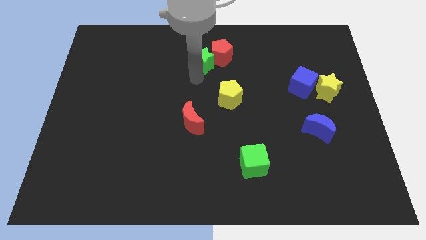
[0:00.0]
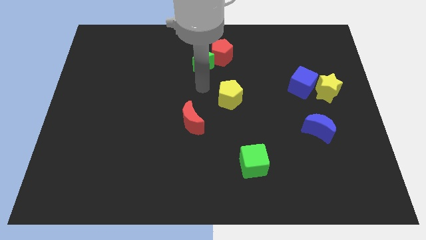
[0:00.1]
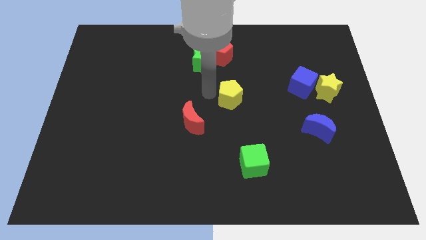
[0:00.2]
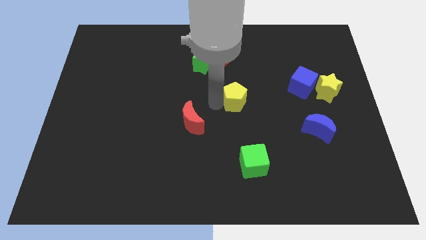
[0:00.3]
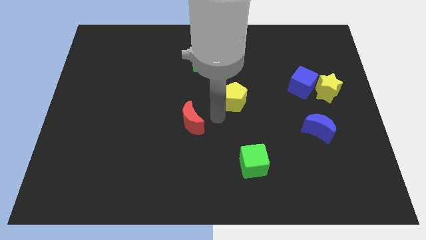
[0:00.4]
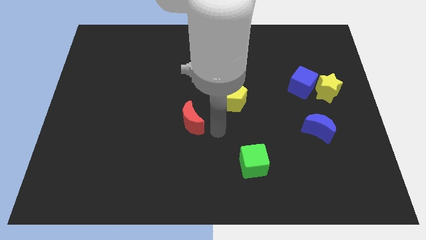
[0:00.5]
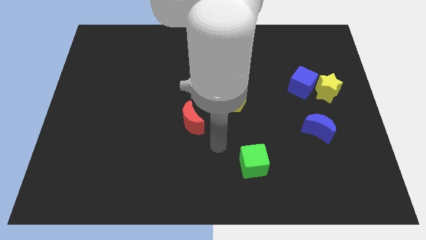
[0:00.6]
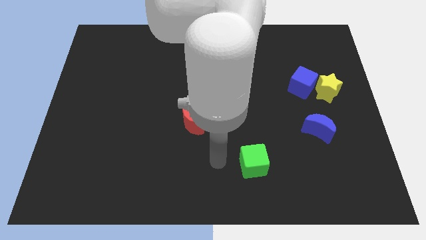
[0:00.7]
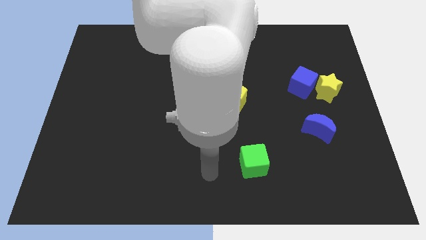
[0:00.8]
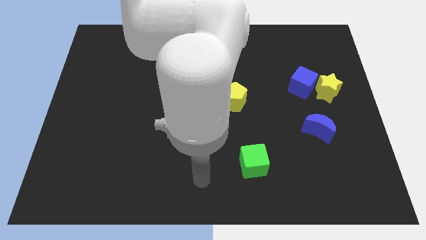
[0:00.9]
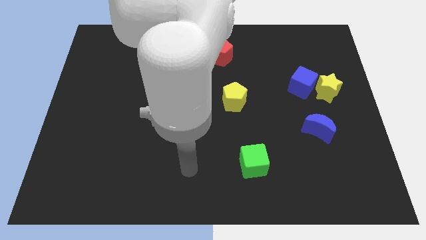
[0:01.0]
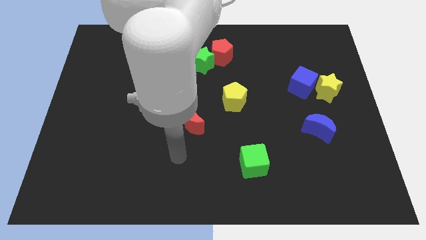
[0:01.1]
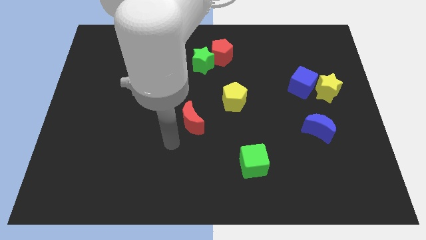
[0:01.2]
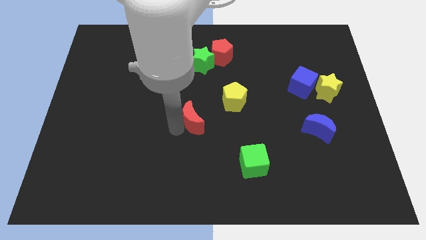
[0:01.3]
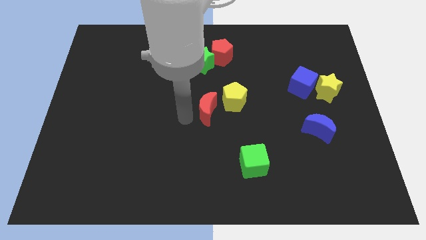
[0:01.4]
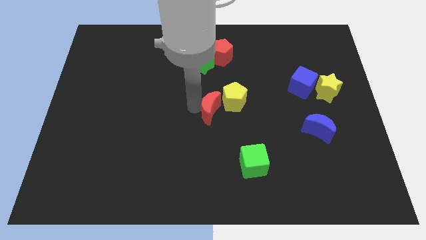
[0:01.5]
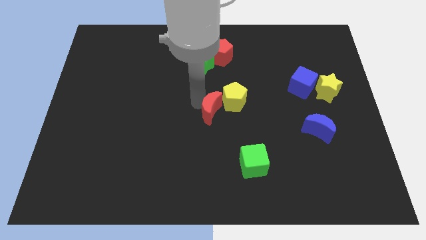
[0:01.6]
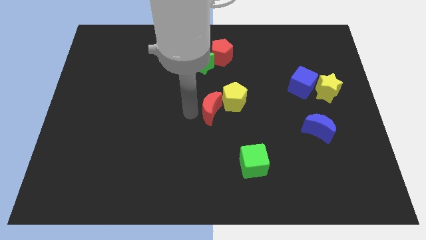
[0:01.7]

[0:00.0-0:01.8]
bring the red moon into the left side of the yellow pentagon

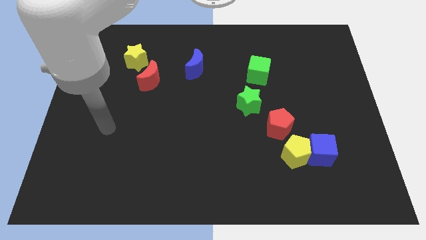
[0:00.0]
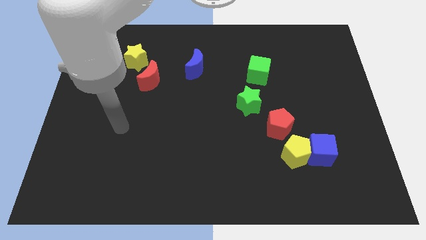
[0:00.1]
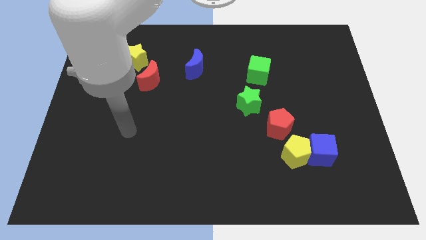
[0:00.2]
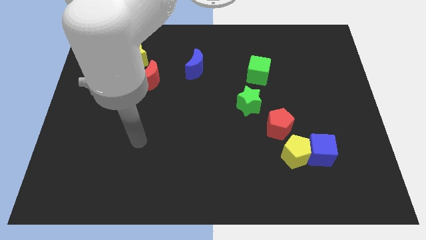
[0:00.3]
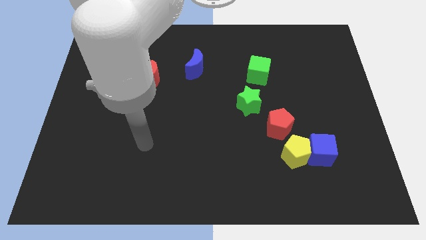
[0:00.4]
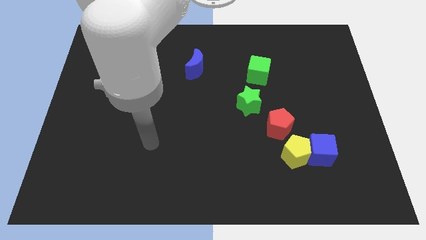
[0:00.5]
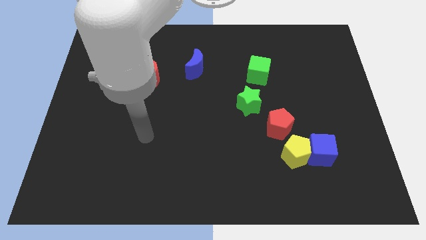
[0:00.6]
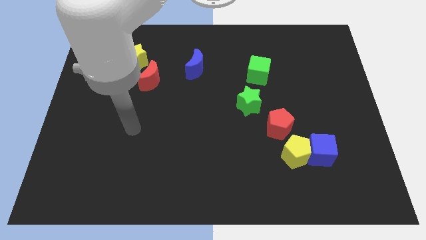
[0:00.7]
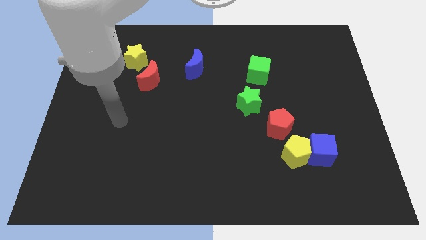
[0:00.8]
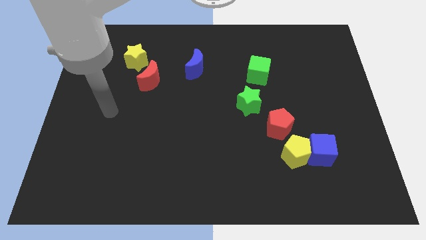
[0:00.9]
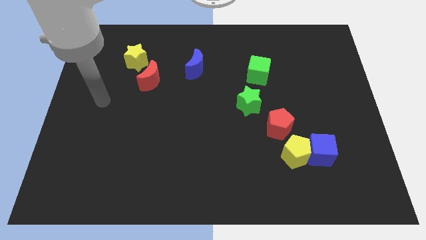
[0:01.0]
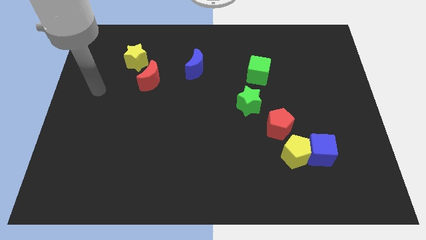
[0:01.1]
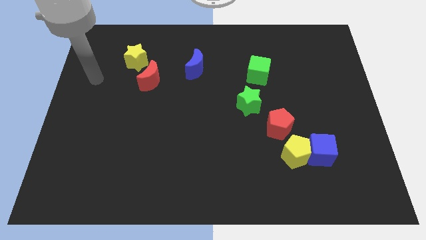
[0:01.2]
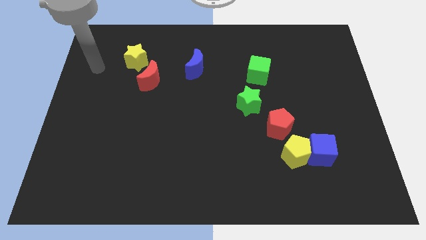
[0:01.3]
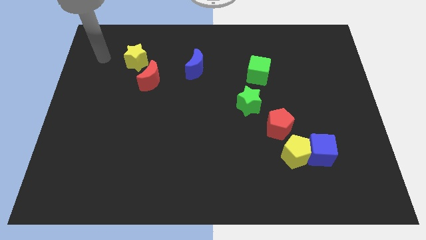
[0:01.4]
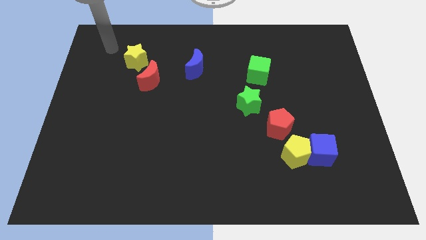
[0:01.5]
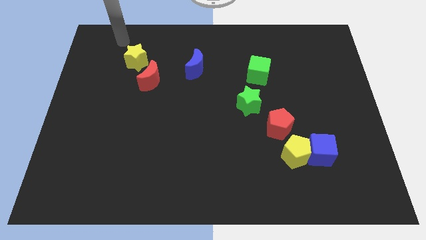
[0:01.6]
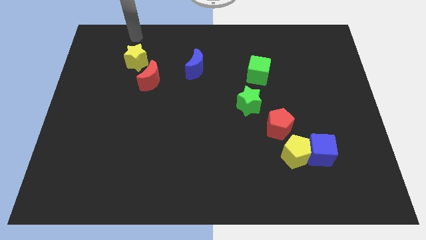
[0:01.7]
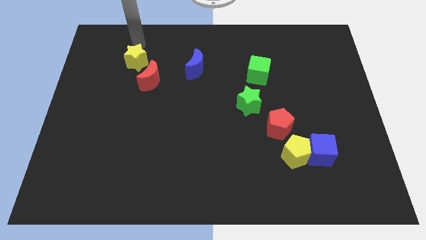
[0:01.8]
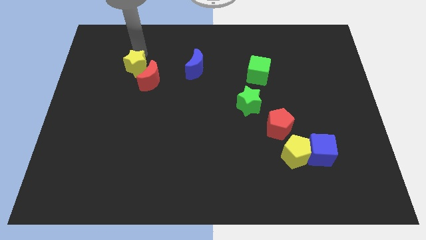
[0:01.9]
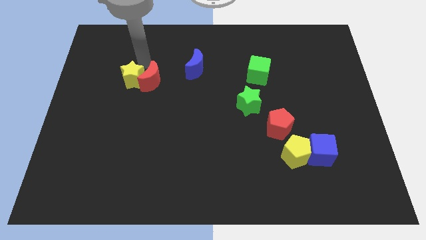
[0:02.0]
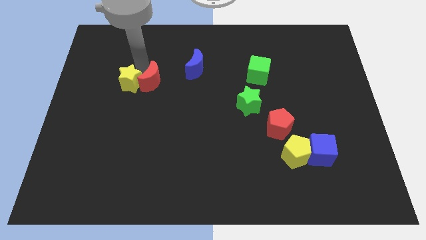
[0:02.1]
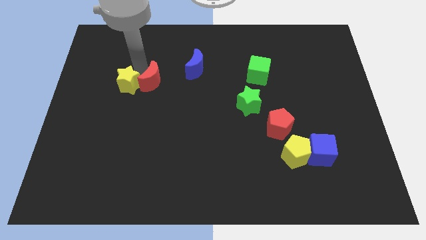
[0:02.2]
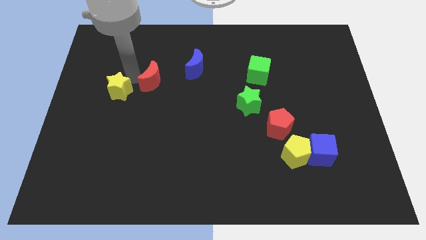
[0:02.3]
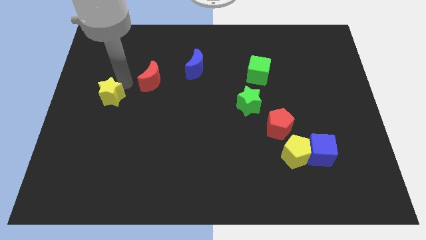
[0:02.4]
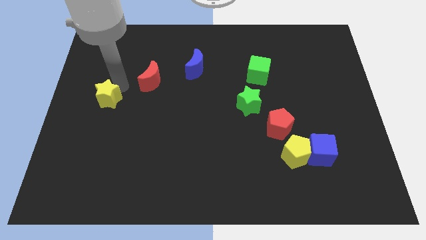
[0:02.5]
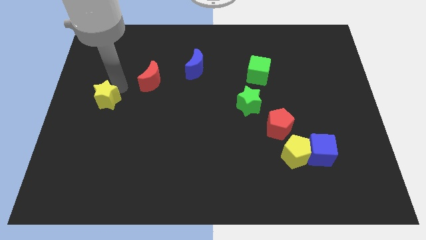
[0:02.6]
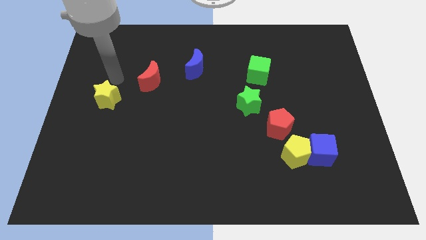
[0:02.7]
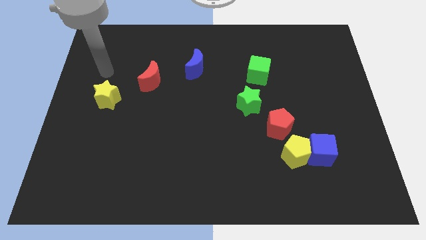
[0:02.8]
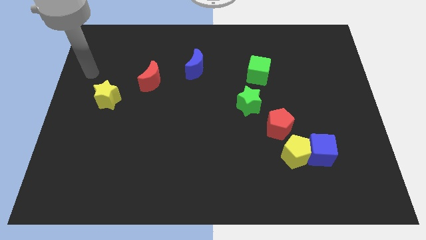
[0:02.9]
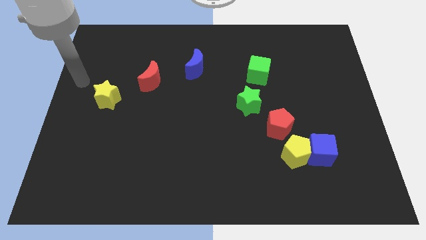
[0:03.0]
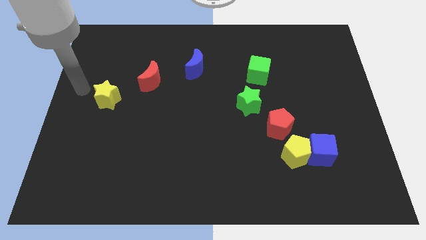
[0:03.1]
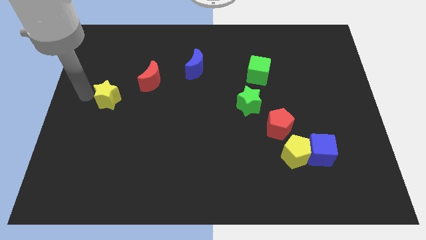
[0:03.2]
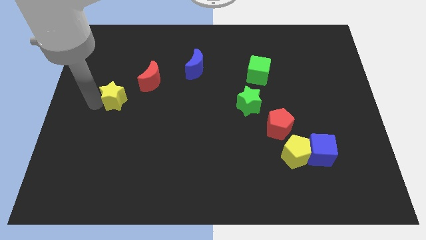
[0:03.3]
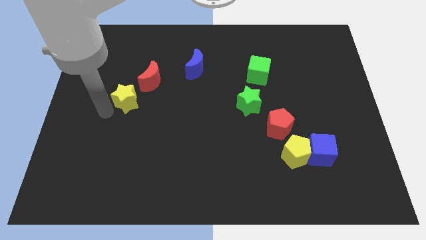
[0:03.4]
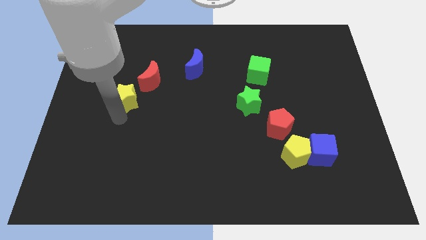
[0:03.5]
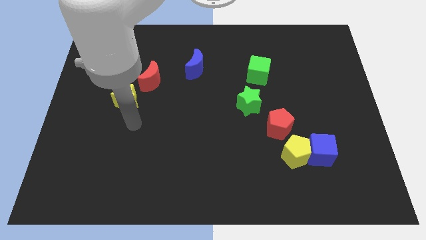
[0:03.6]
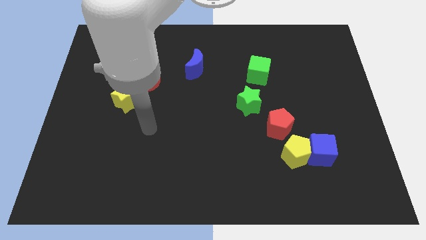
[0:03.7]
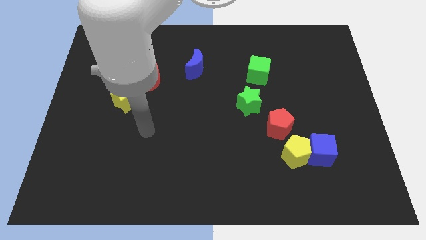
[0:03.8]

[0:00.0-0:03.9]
separate the yellow star from red moon

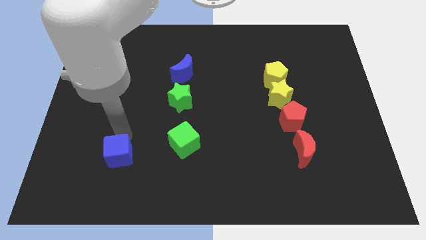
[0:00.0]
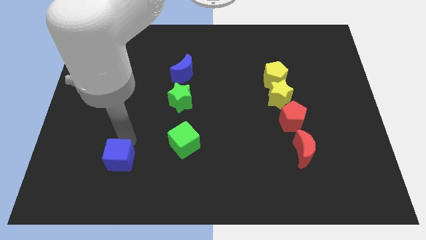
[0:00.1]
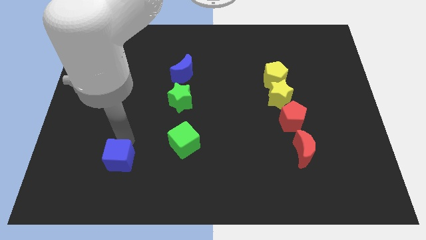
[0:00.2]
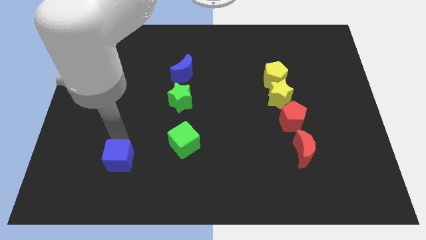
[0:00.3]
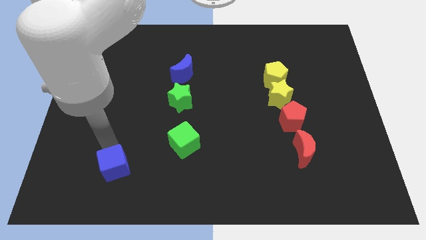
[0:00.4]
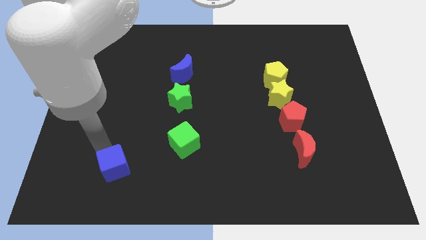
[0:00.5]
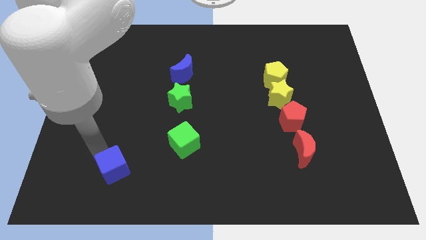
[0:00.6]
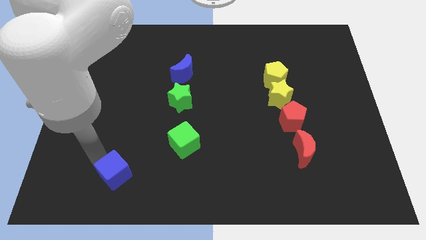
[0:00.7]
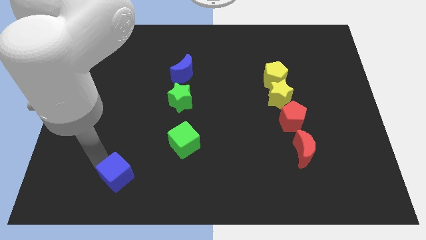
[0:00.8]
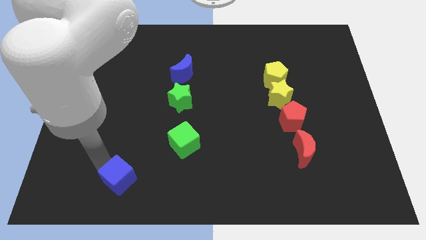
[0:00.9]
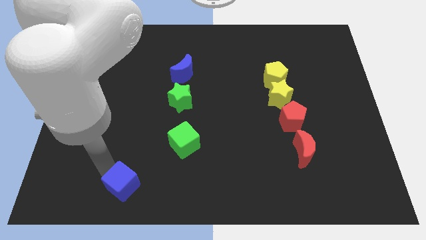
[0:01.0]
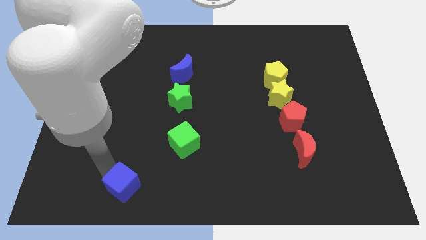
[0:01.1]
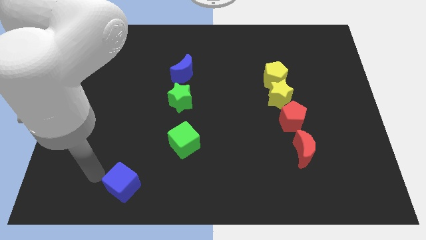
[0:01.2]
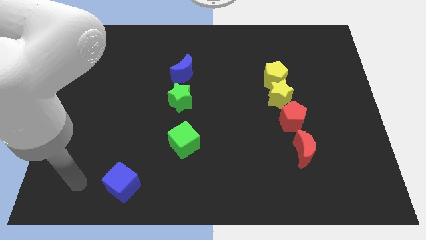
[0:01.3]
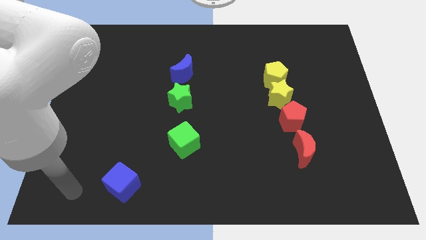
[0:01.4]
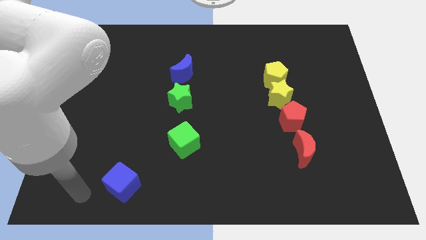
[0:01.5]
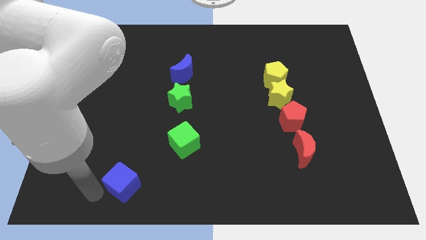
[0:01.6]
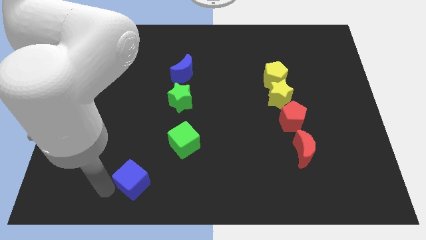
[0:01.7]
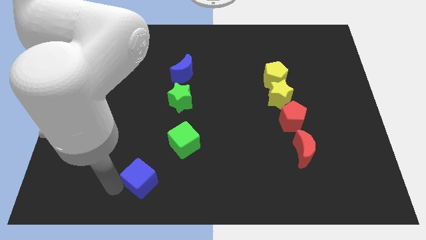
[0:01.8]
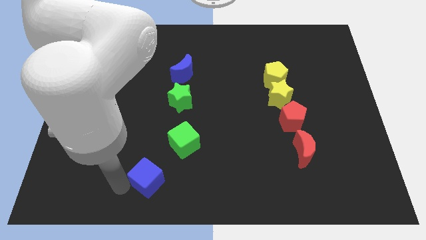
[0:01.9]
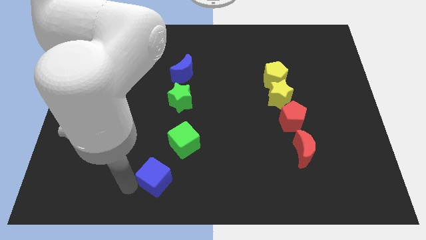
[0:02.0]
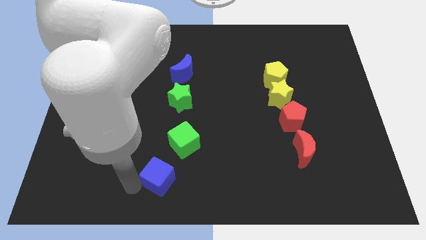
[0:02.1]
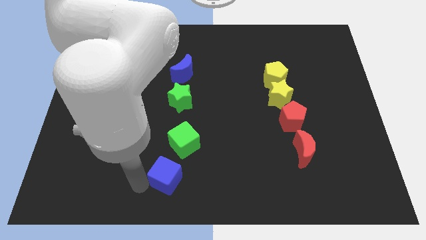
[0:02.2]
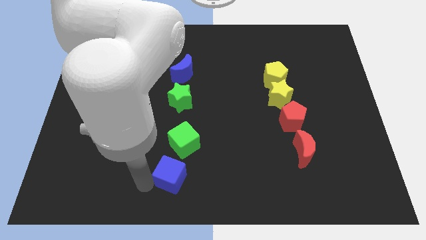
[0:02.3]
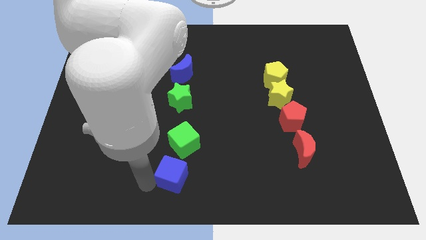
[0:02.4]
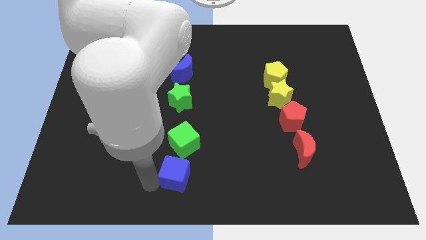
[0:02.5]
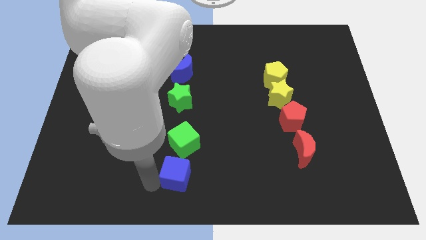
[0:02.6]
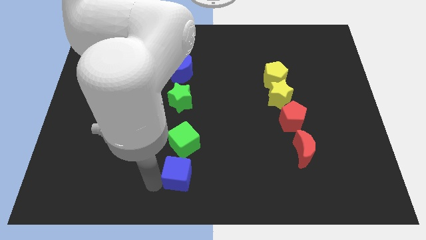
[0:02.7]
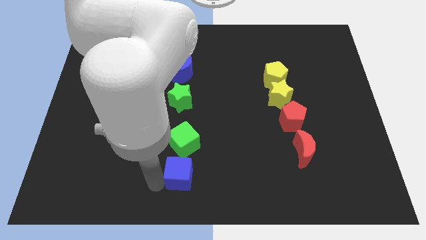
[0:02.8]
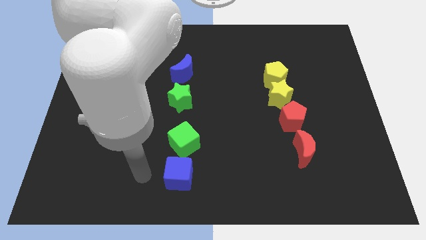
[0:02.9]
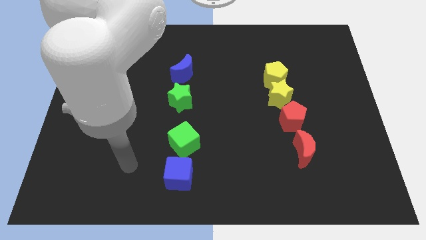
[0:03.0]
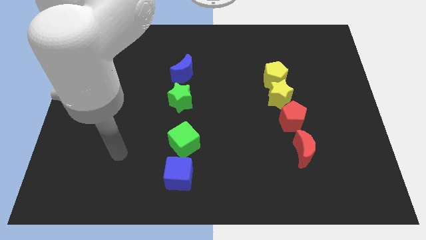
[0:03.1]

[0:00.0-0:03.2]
put the blue cube at the bottom side of the green cube
